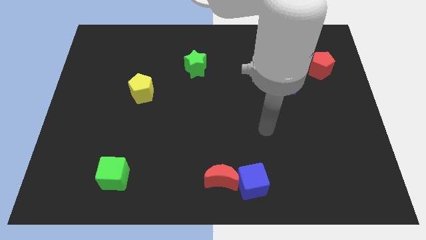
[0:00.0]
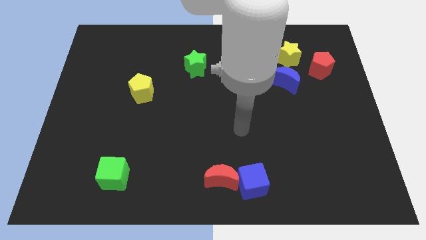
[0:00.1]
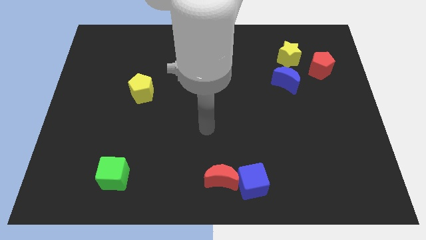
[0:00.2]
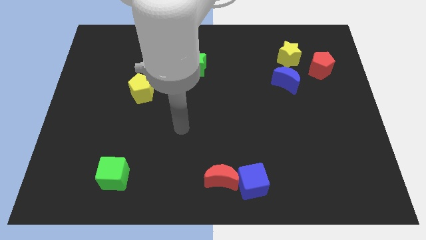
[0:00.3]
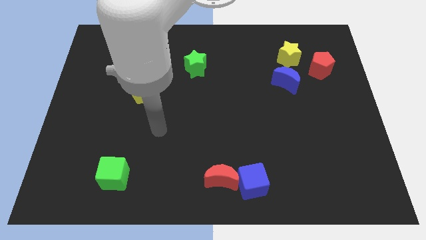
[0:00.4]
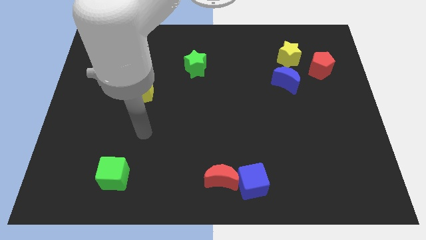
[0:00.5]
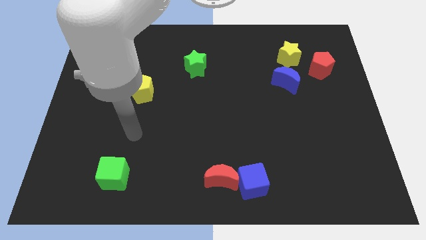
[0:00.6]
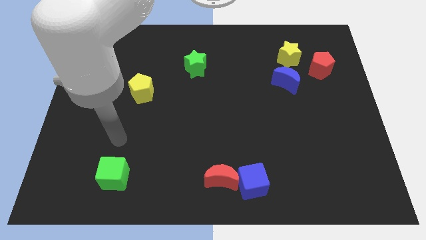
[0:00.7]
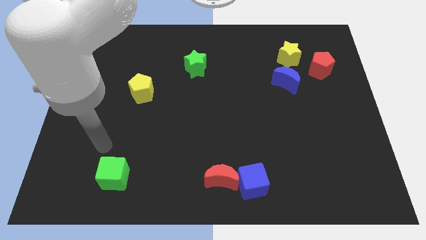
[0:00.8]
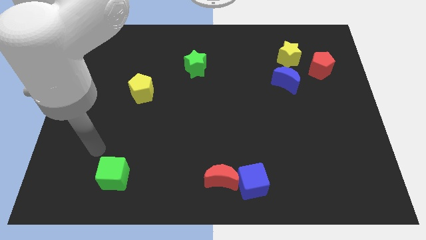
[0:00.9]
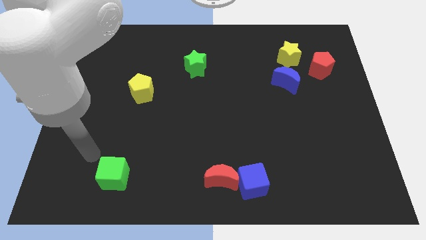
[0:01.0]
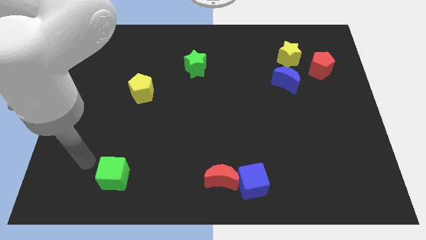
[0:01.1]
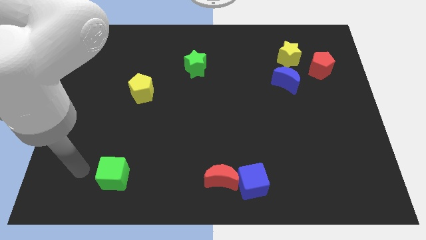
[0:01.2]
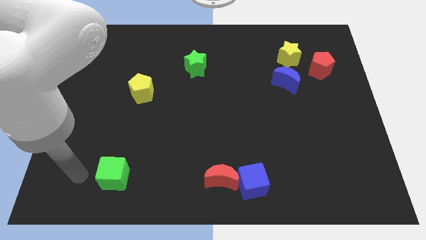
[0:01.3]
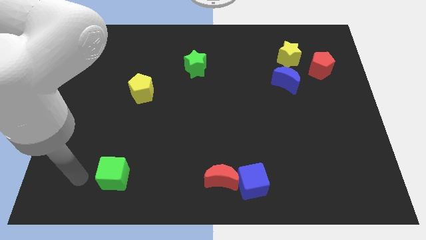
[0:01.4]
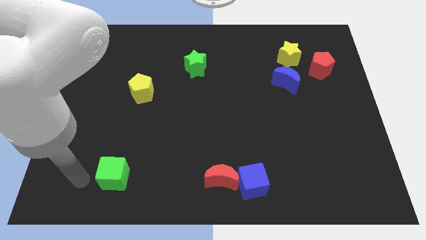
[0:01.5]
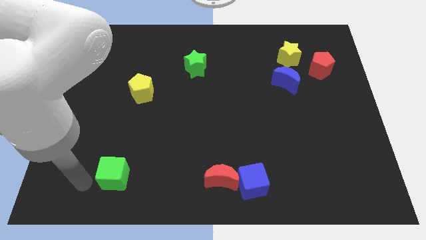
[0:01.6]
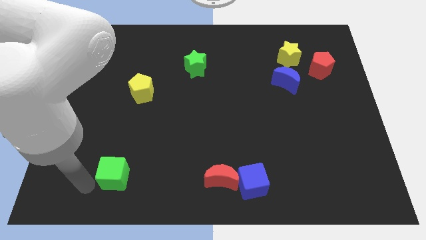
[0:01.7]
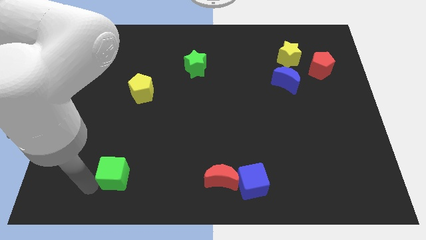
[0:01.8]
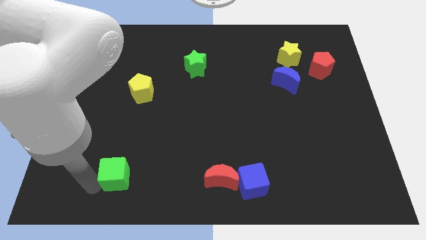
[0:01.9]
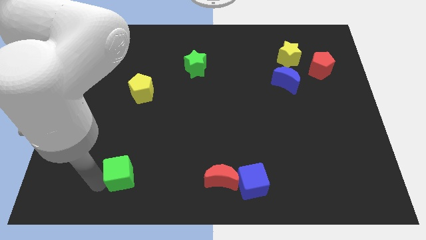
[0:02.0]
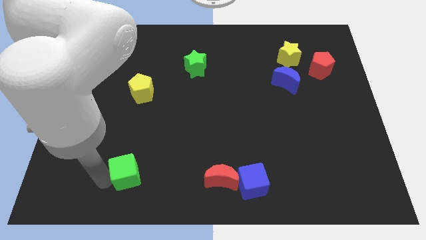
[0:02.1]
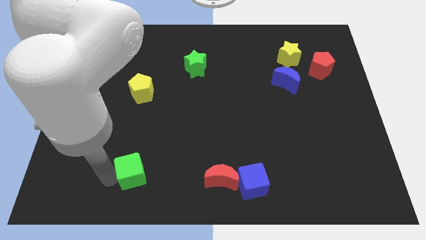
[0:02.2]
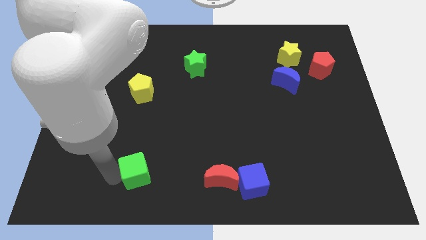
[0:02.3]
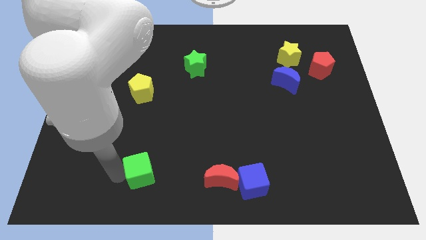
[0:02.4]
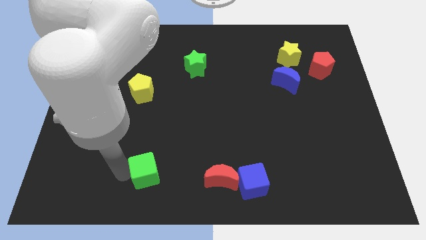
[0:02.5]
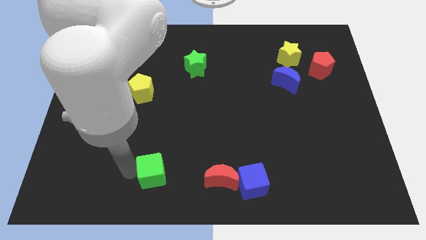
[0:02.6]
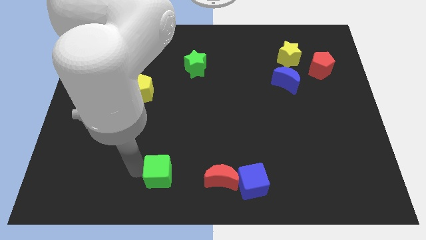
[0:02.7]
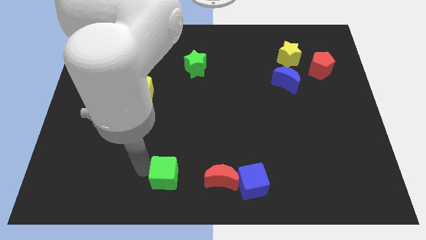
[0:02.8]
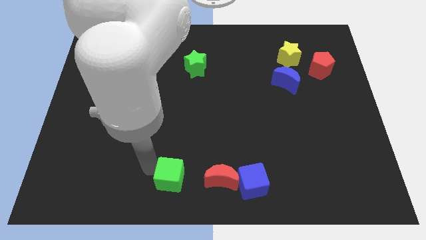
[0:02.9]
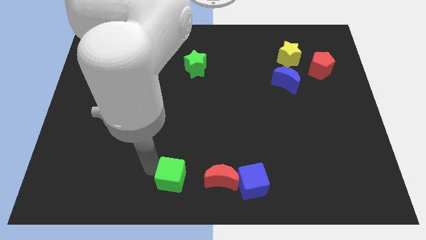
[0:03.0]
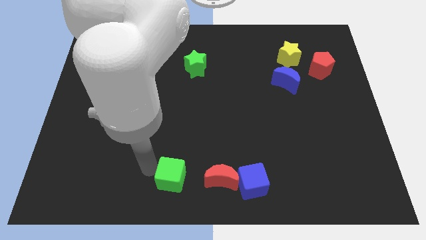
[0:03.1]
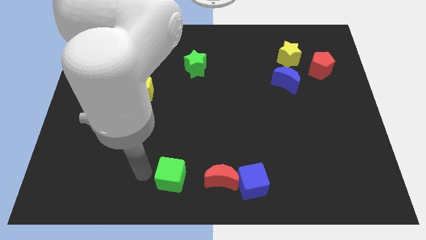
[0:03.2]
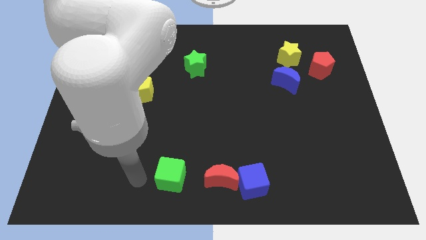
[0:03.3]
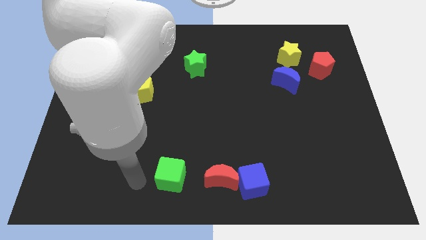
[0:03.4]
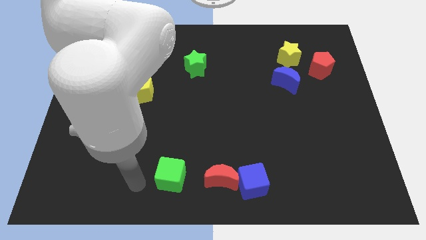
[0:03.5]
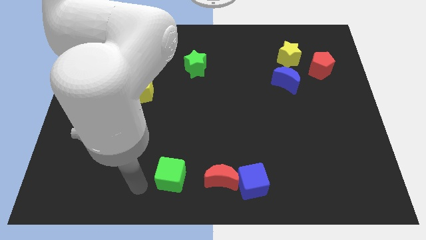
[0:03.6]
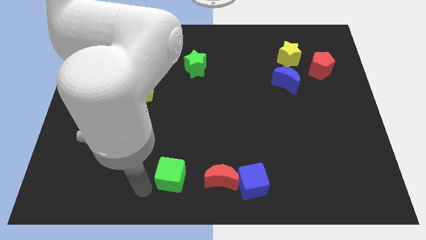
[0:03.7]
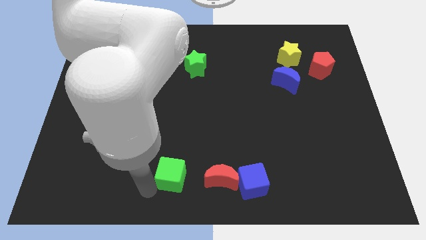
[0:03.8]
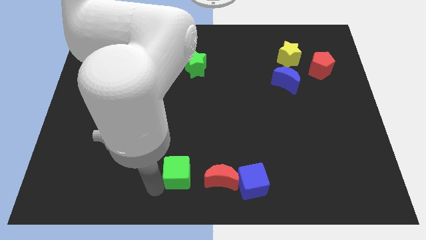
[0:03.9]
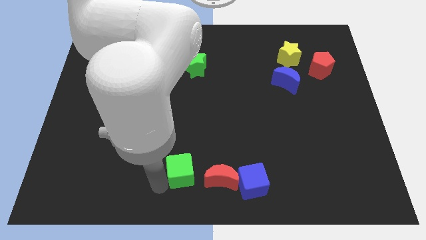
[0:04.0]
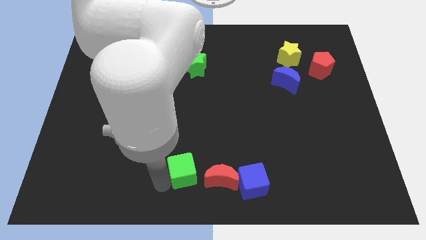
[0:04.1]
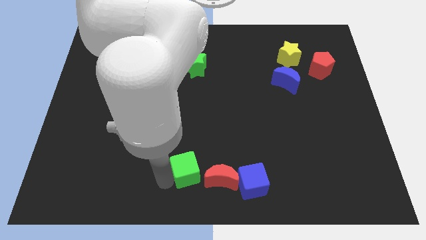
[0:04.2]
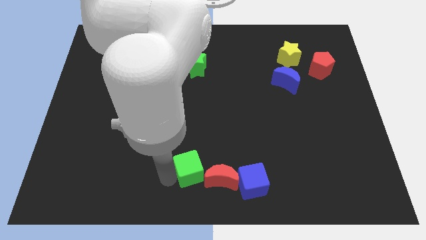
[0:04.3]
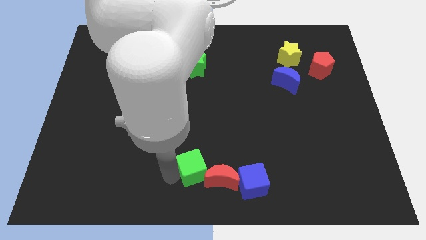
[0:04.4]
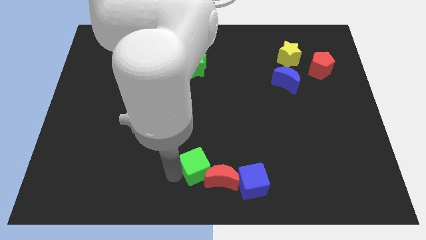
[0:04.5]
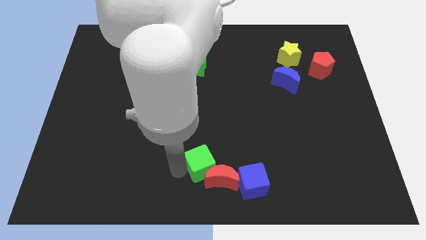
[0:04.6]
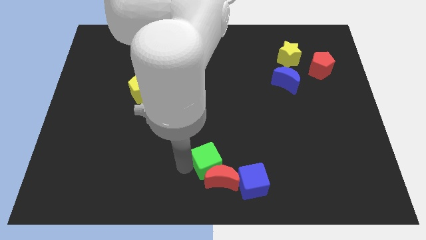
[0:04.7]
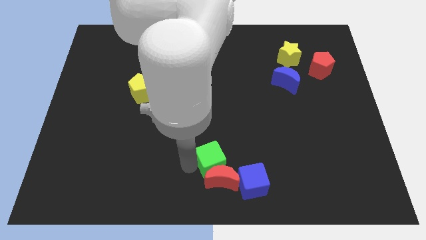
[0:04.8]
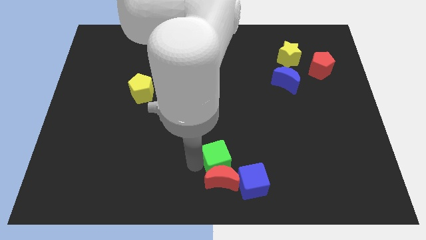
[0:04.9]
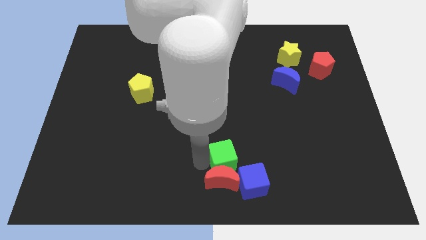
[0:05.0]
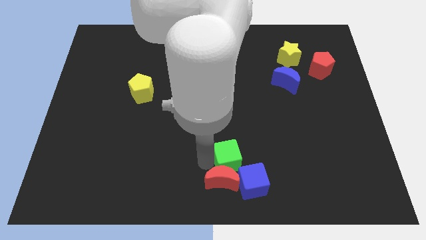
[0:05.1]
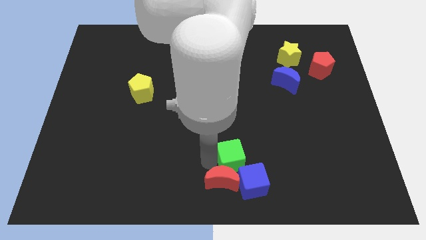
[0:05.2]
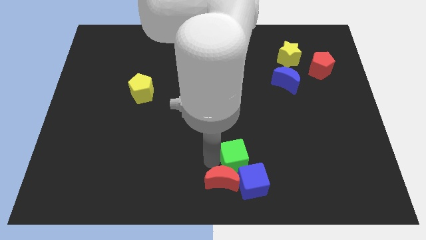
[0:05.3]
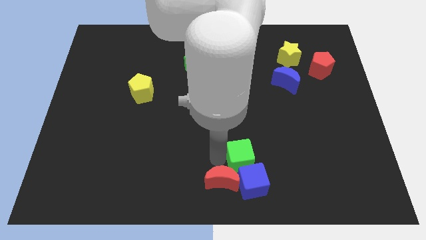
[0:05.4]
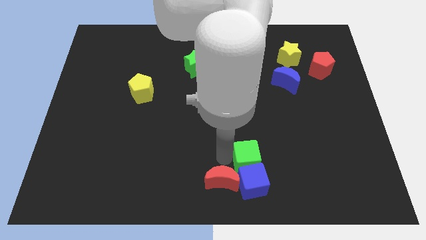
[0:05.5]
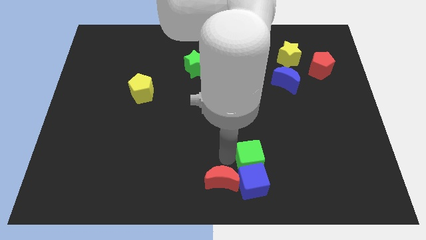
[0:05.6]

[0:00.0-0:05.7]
move the green cube towards the blue cube

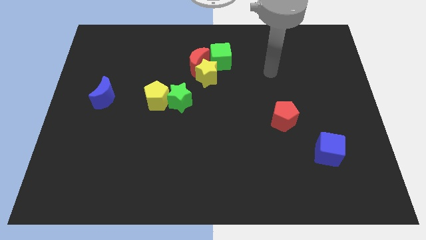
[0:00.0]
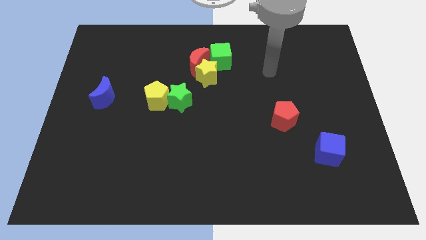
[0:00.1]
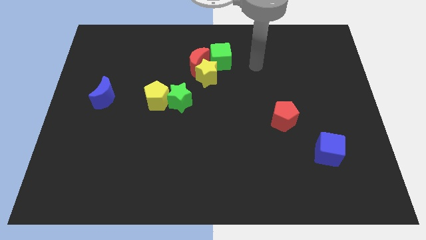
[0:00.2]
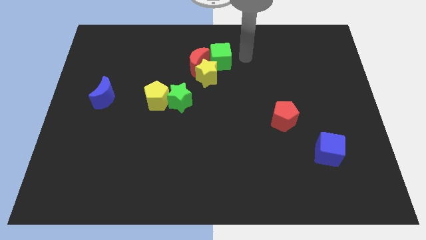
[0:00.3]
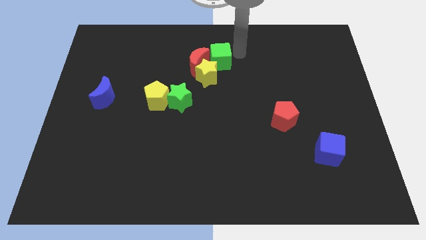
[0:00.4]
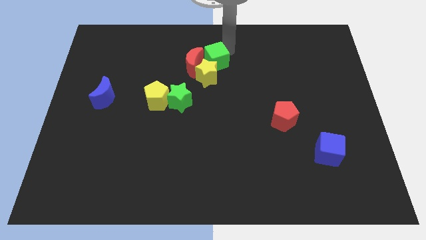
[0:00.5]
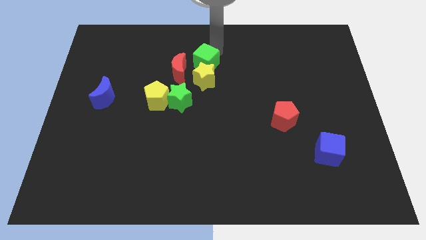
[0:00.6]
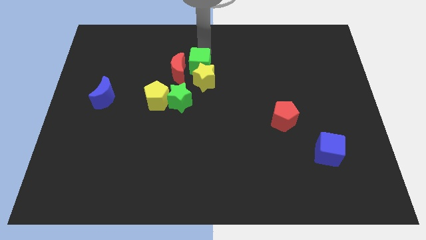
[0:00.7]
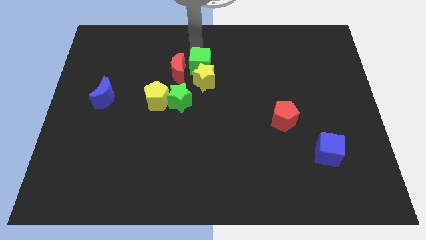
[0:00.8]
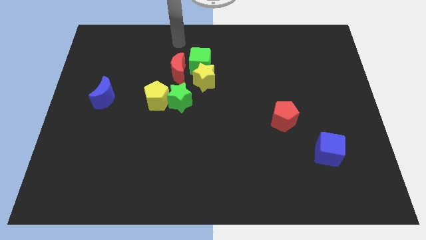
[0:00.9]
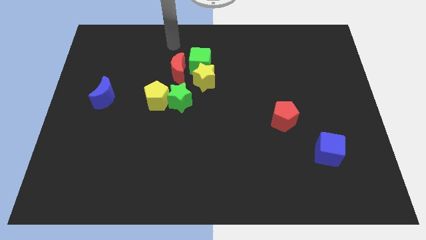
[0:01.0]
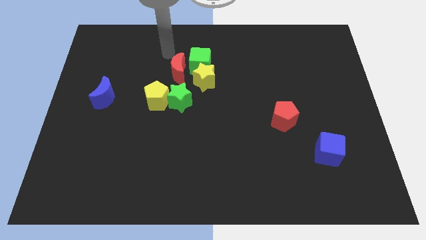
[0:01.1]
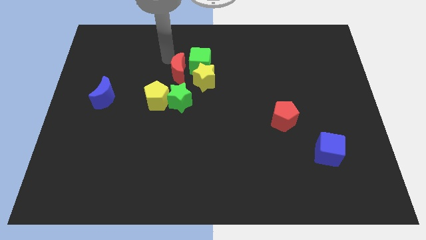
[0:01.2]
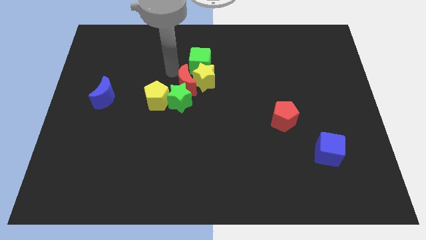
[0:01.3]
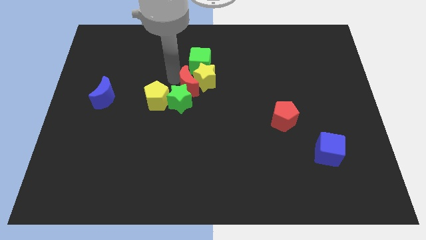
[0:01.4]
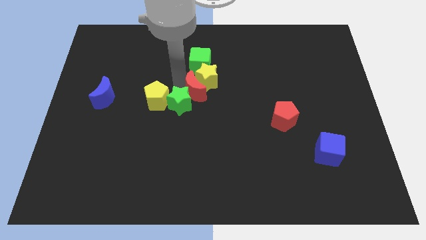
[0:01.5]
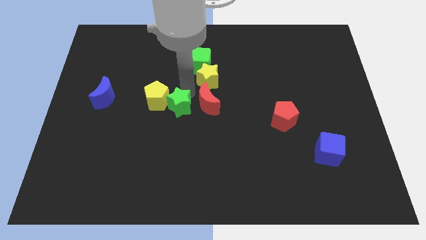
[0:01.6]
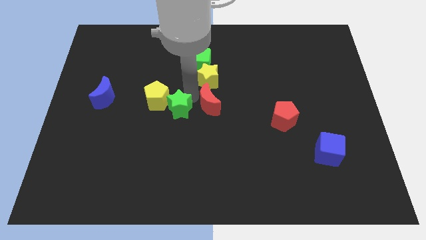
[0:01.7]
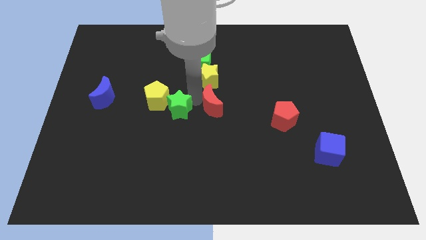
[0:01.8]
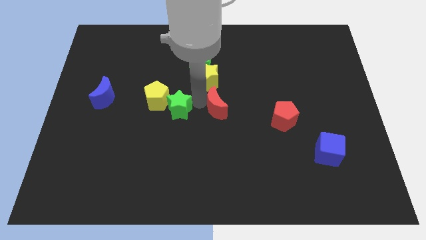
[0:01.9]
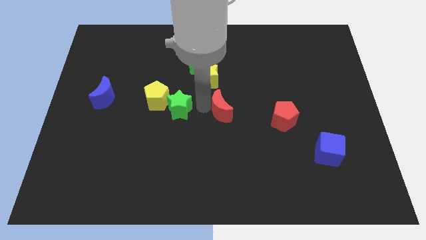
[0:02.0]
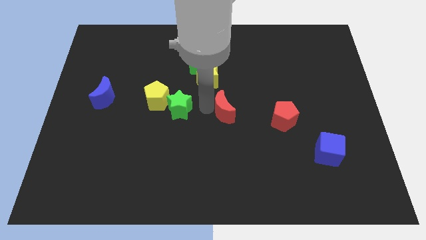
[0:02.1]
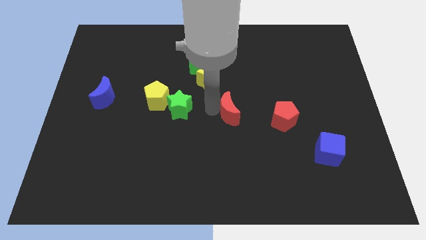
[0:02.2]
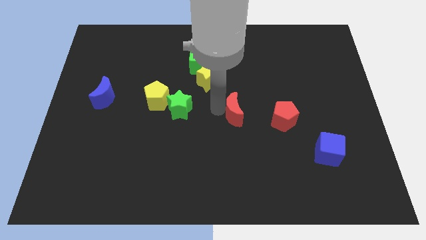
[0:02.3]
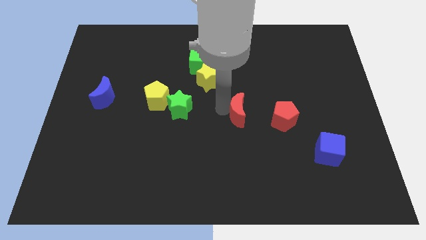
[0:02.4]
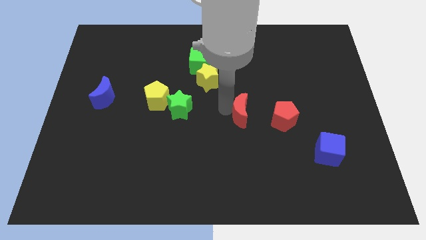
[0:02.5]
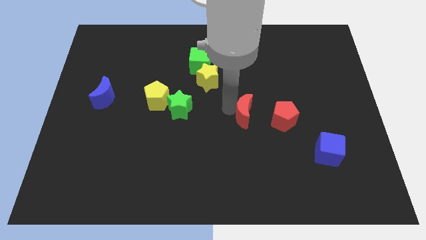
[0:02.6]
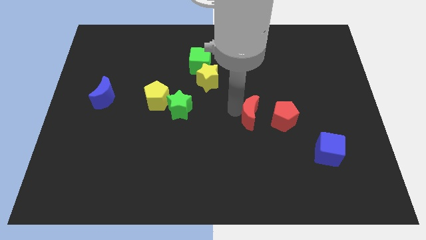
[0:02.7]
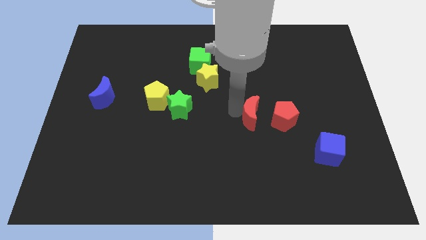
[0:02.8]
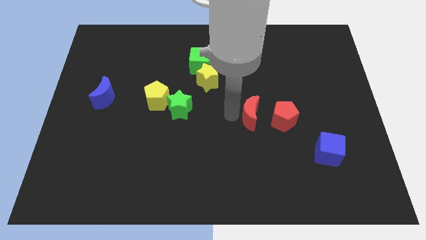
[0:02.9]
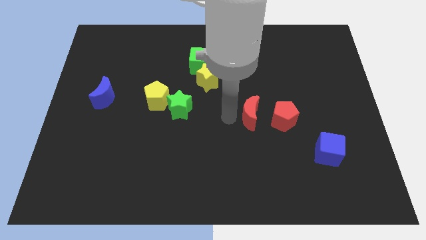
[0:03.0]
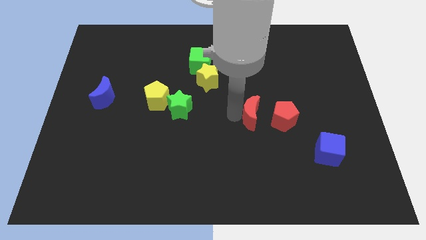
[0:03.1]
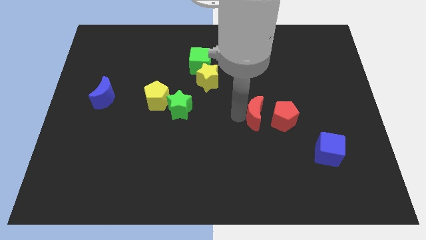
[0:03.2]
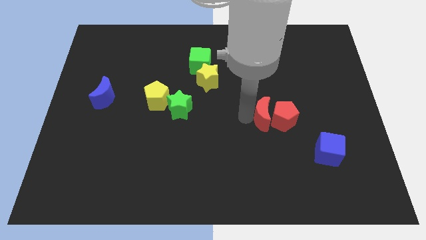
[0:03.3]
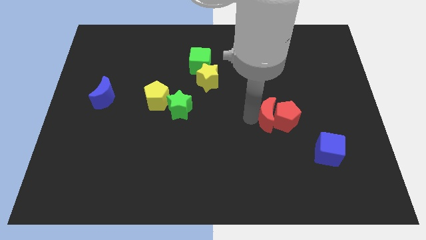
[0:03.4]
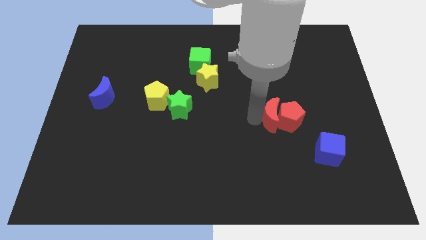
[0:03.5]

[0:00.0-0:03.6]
put the red moon next to the red pentagon
